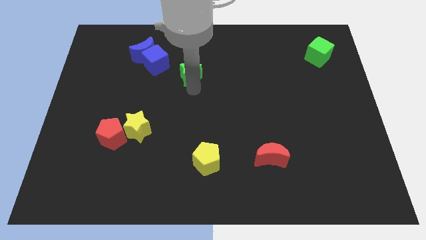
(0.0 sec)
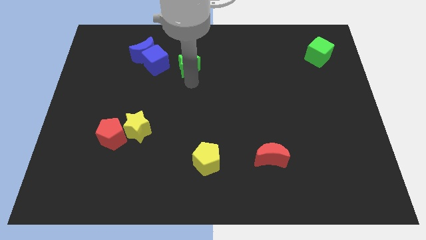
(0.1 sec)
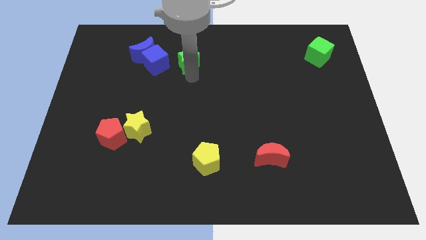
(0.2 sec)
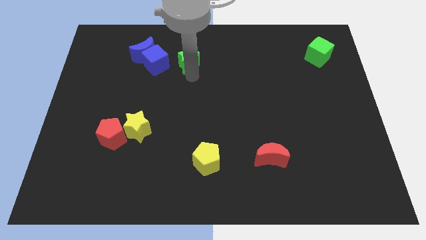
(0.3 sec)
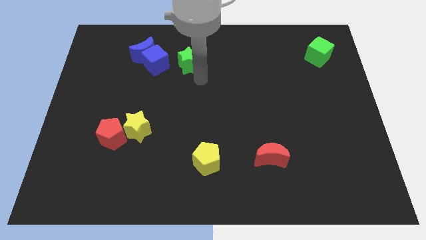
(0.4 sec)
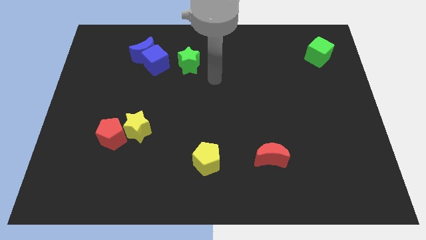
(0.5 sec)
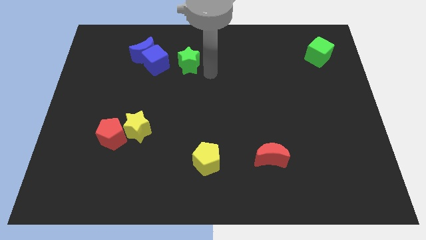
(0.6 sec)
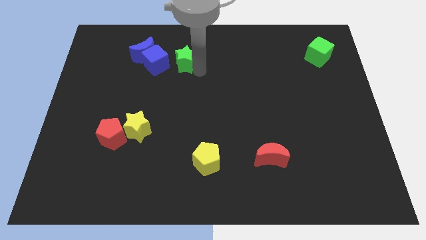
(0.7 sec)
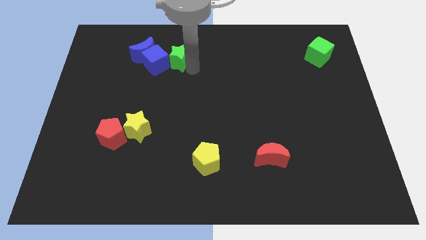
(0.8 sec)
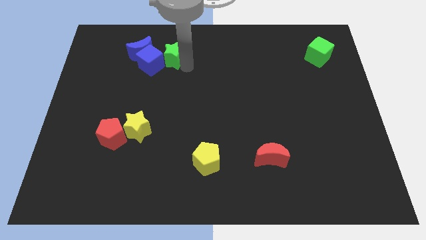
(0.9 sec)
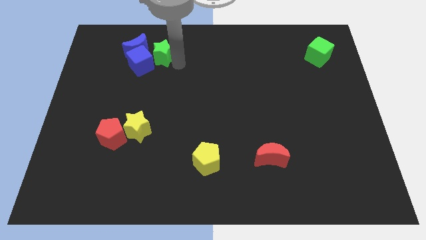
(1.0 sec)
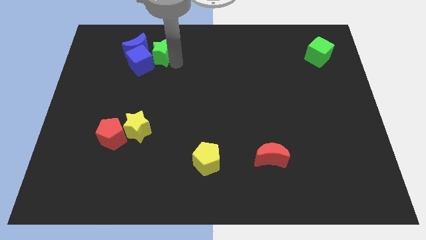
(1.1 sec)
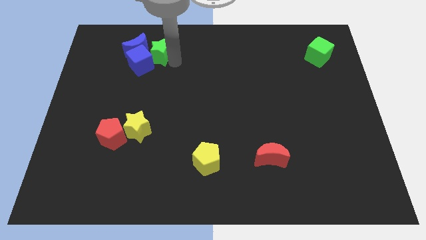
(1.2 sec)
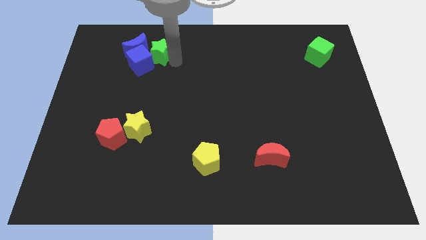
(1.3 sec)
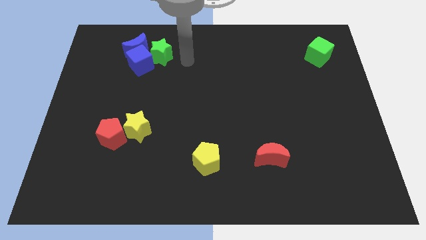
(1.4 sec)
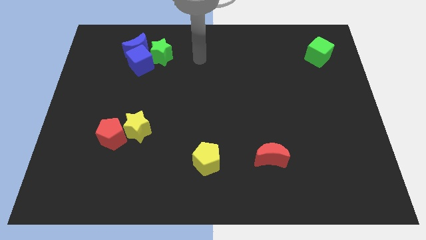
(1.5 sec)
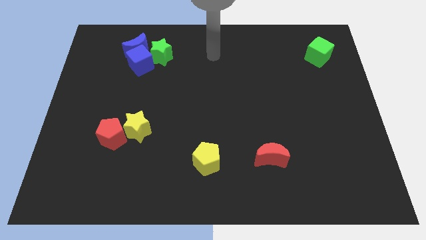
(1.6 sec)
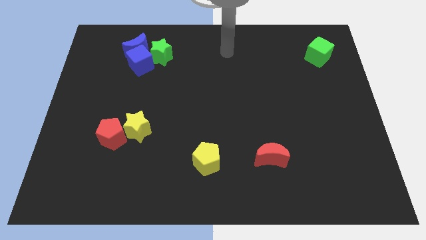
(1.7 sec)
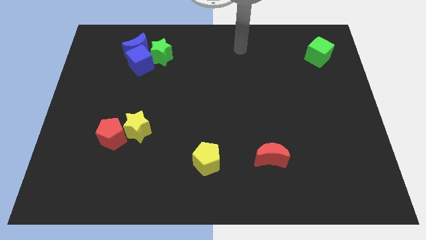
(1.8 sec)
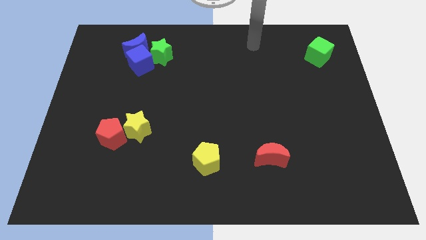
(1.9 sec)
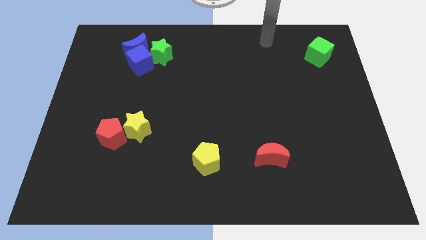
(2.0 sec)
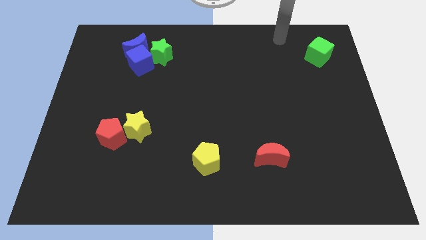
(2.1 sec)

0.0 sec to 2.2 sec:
push the green star into the blue cube

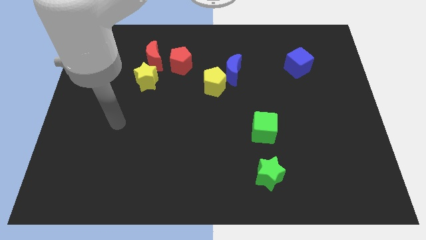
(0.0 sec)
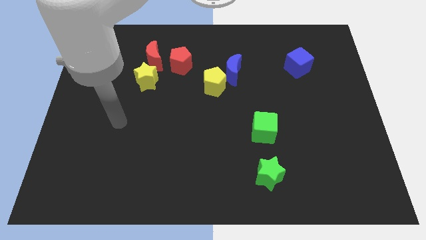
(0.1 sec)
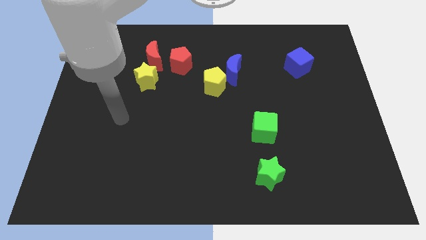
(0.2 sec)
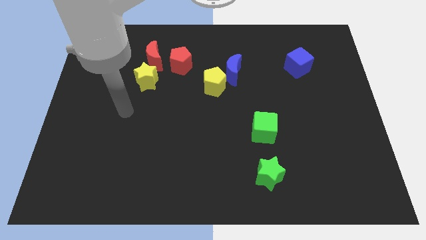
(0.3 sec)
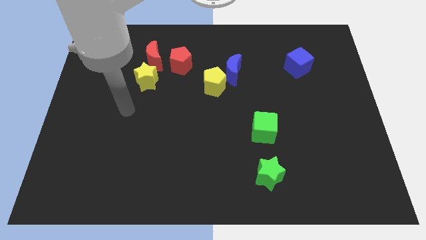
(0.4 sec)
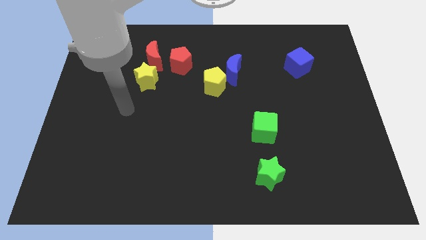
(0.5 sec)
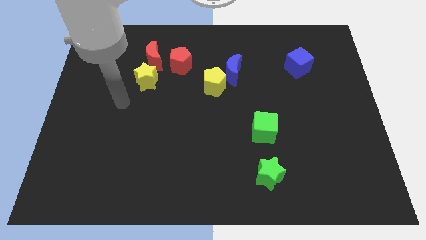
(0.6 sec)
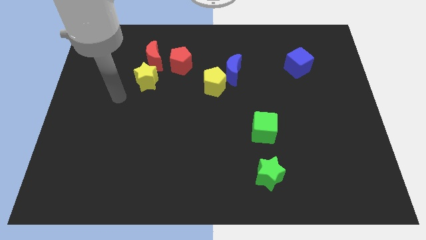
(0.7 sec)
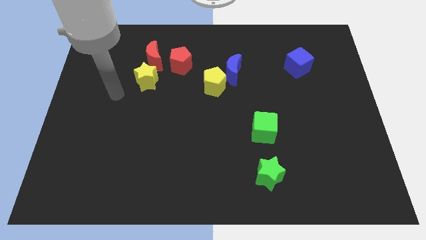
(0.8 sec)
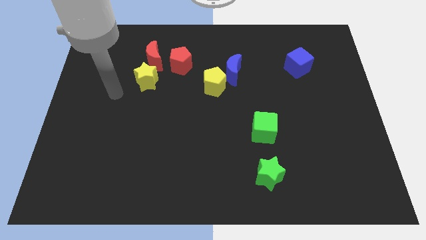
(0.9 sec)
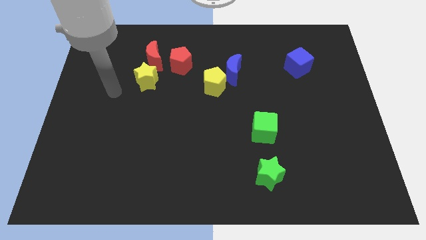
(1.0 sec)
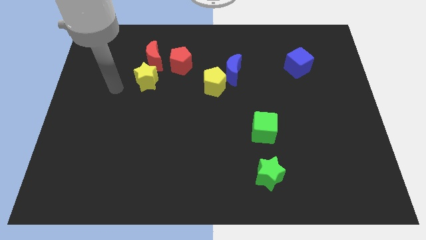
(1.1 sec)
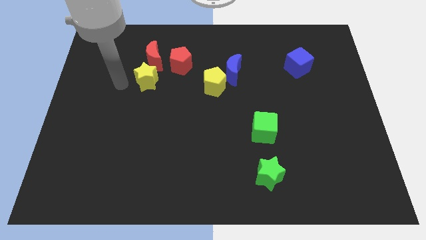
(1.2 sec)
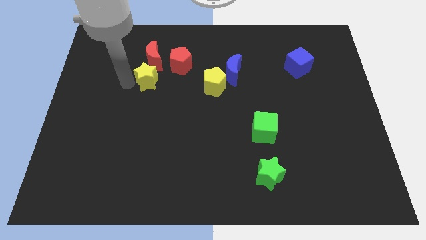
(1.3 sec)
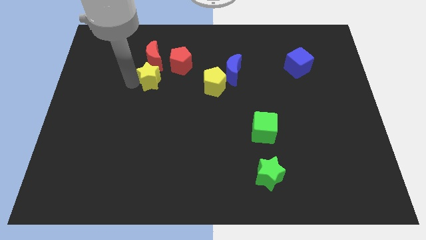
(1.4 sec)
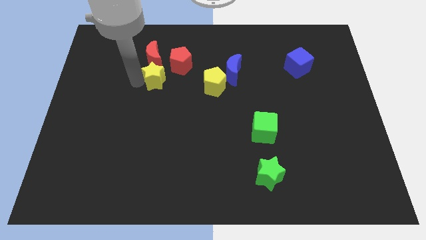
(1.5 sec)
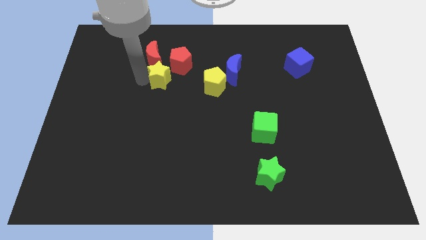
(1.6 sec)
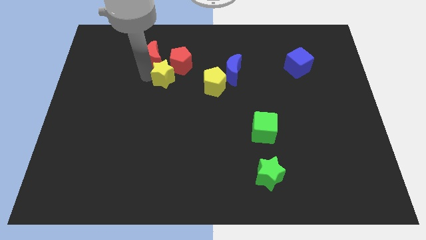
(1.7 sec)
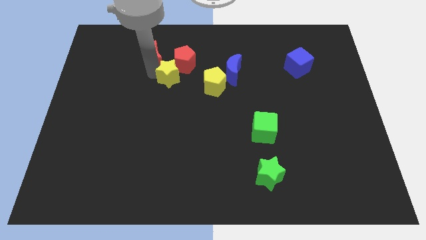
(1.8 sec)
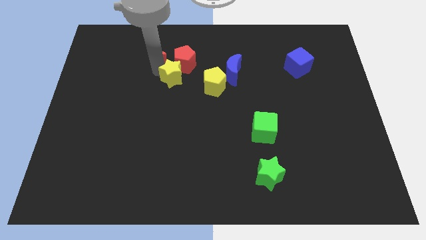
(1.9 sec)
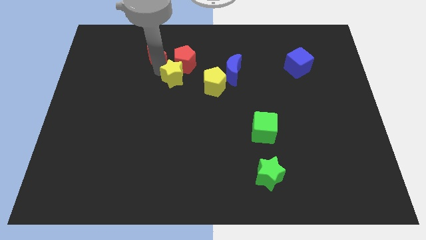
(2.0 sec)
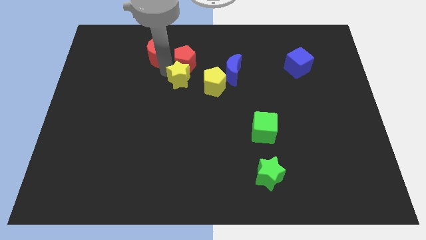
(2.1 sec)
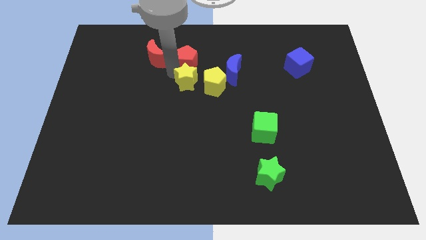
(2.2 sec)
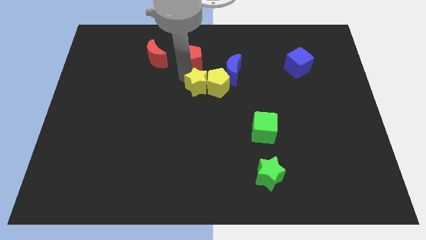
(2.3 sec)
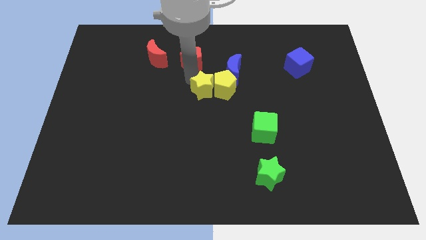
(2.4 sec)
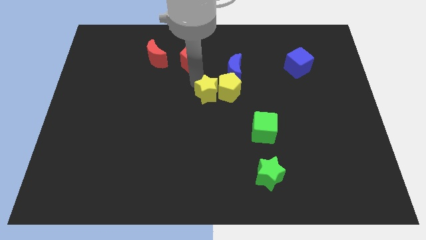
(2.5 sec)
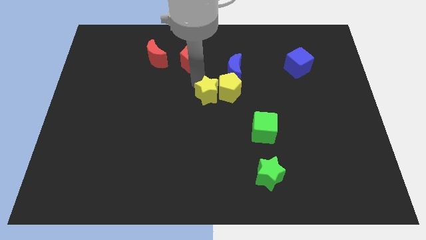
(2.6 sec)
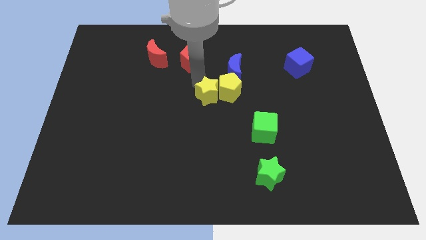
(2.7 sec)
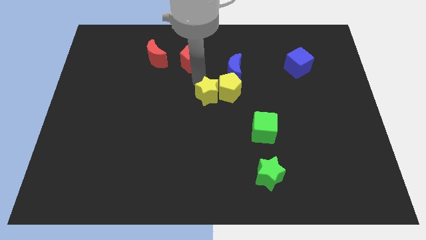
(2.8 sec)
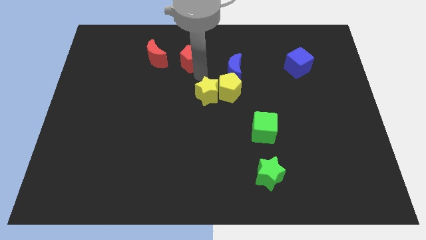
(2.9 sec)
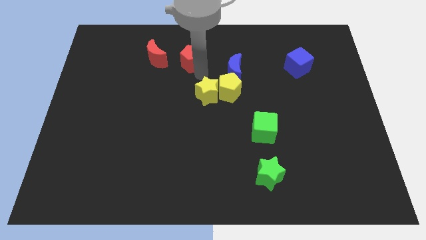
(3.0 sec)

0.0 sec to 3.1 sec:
push yellow star into the yellow pentagon

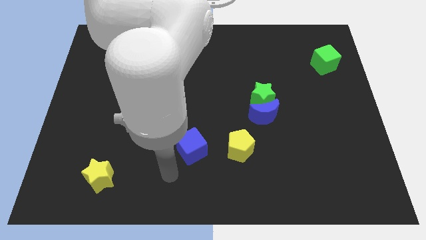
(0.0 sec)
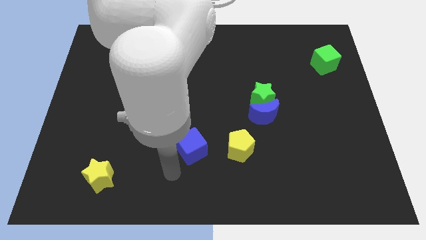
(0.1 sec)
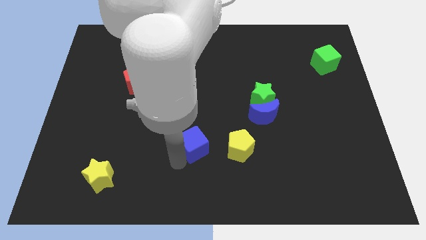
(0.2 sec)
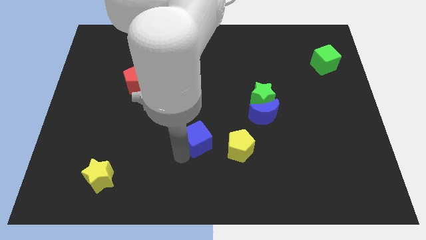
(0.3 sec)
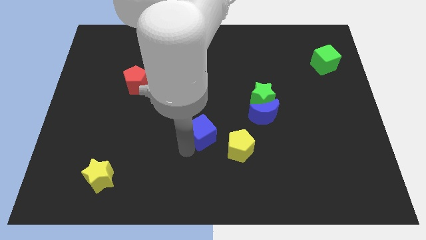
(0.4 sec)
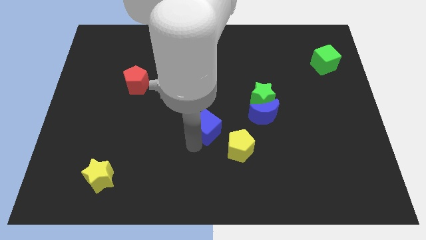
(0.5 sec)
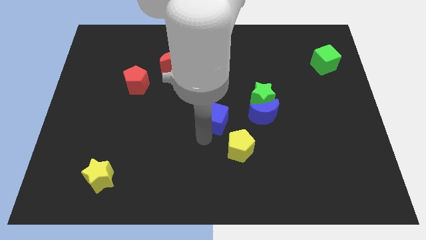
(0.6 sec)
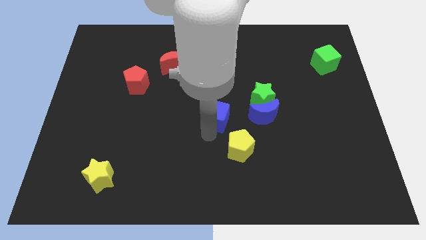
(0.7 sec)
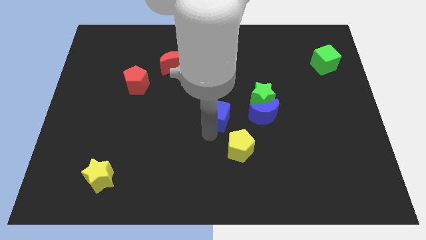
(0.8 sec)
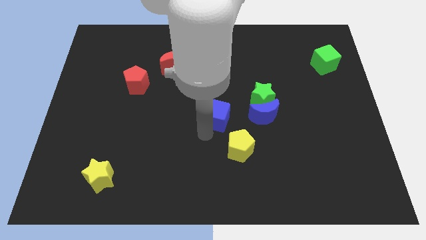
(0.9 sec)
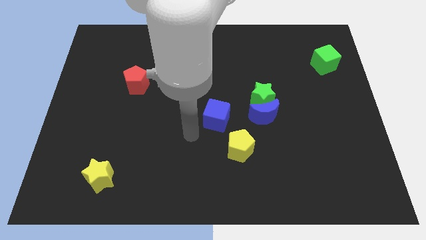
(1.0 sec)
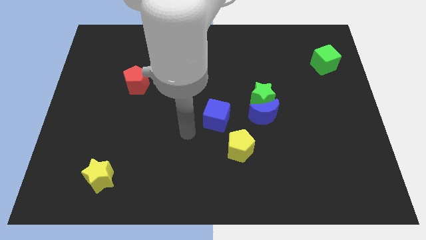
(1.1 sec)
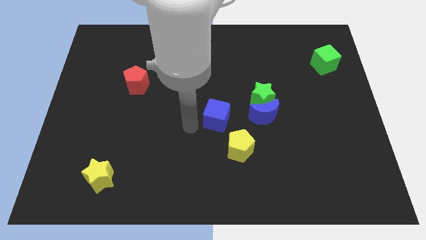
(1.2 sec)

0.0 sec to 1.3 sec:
place the blue cube left to the blue moon

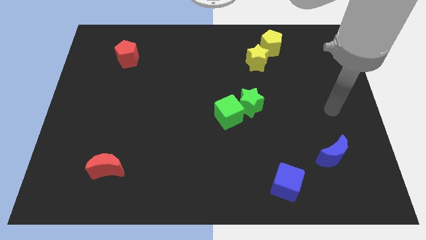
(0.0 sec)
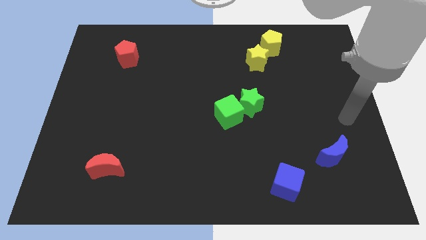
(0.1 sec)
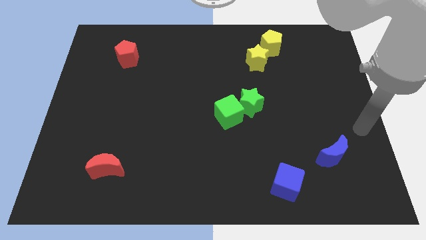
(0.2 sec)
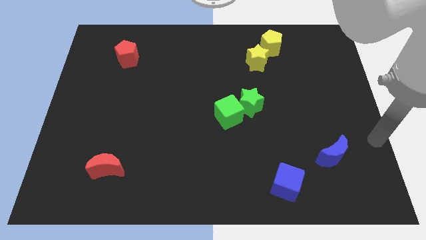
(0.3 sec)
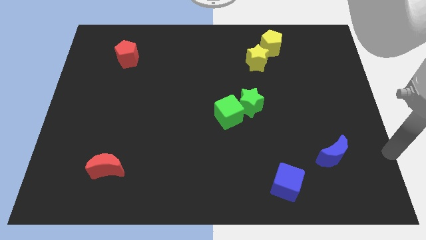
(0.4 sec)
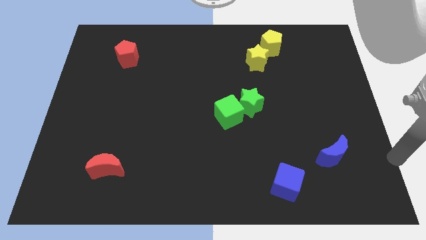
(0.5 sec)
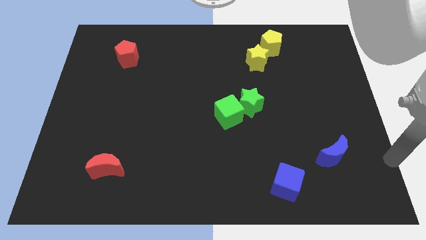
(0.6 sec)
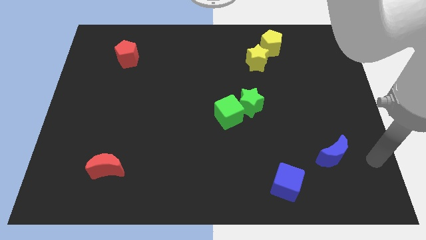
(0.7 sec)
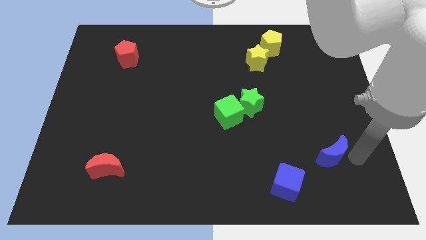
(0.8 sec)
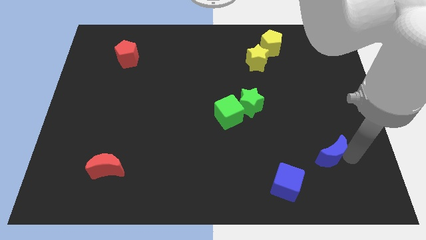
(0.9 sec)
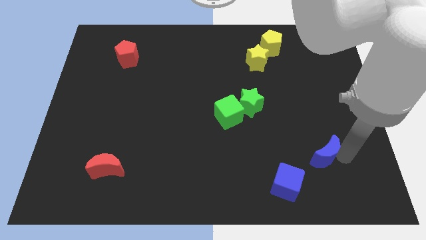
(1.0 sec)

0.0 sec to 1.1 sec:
tap the right side of blue moon

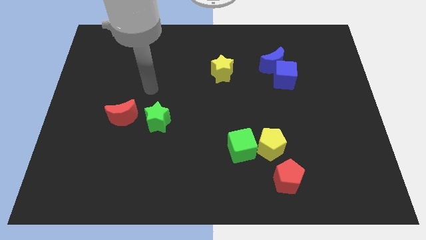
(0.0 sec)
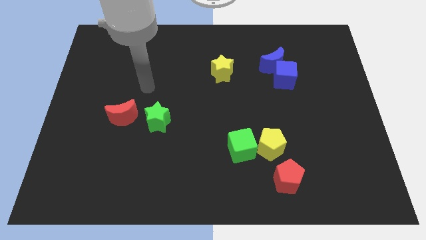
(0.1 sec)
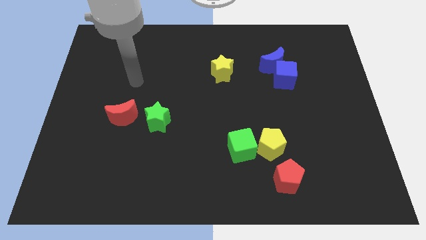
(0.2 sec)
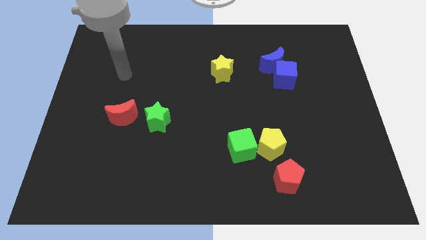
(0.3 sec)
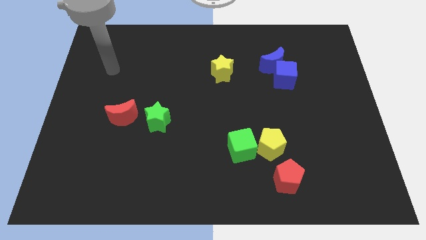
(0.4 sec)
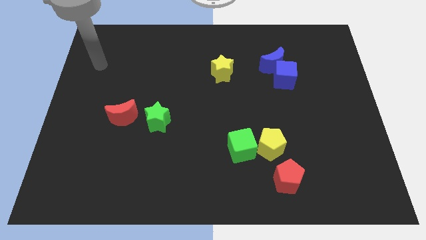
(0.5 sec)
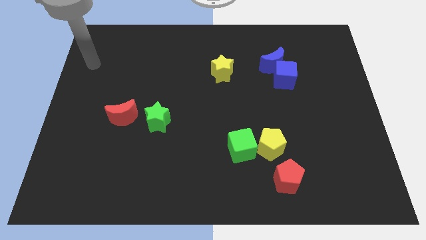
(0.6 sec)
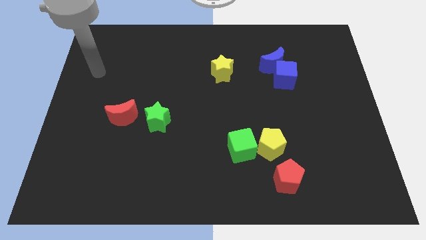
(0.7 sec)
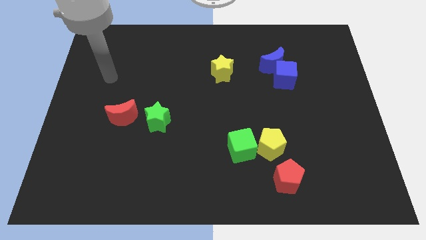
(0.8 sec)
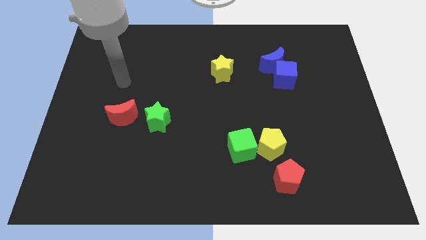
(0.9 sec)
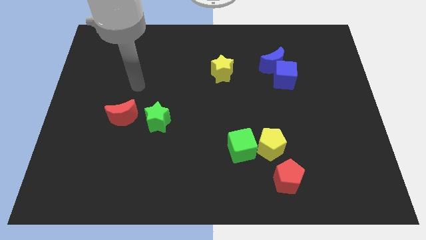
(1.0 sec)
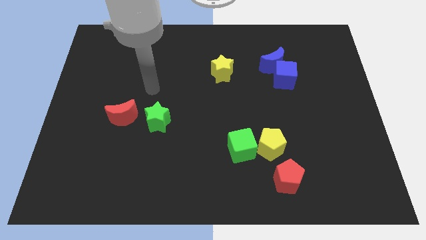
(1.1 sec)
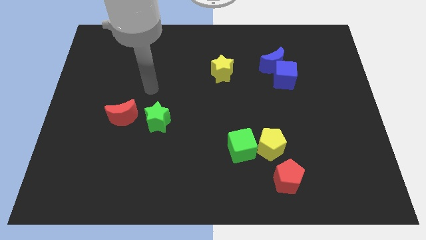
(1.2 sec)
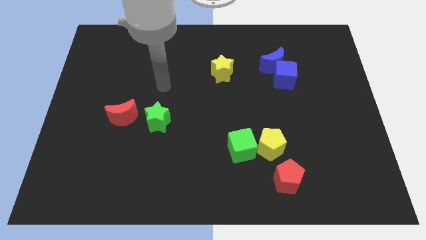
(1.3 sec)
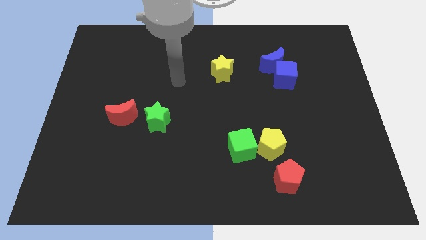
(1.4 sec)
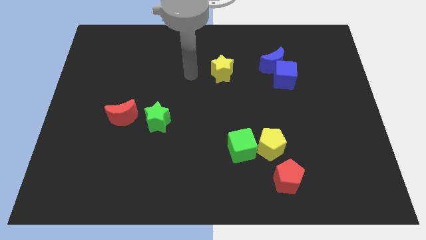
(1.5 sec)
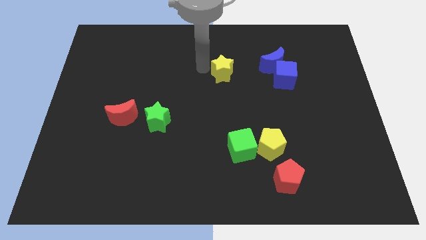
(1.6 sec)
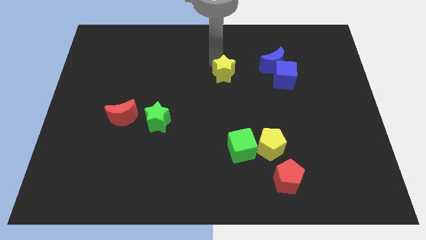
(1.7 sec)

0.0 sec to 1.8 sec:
place your arm towards top left to the yellow pentagon
